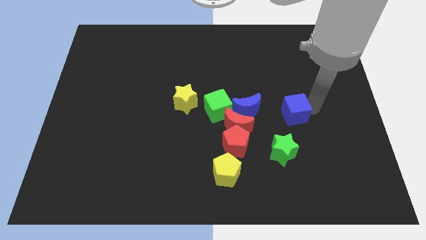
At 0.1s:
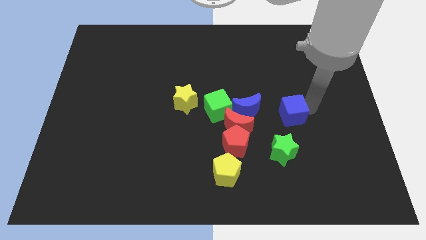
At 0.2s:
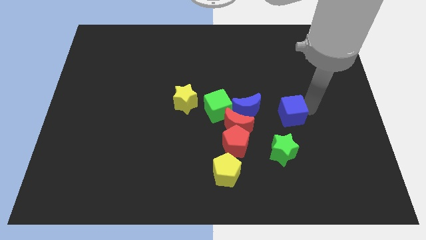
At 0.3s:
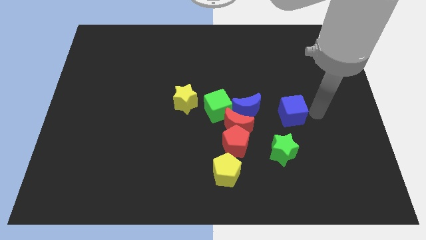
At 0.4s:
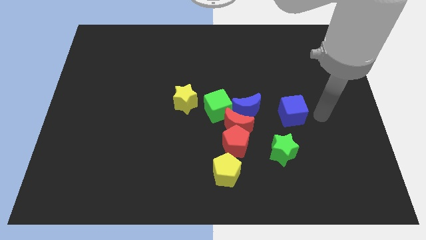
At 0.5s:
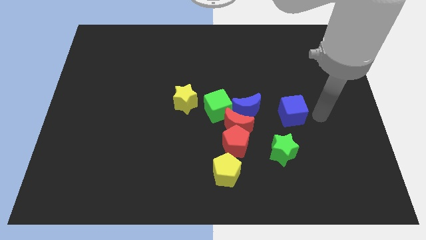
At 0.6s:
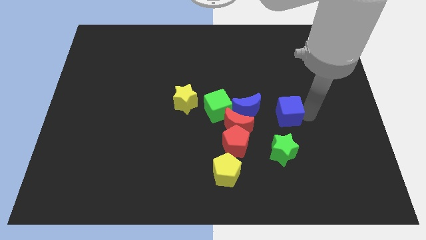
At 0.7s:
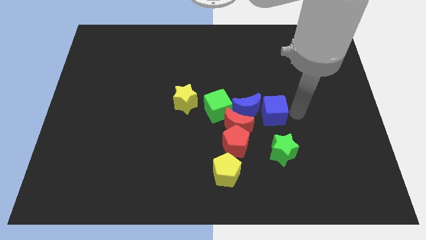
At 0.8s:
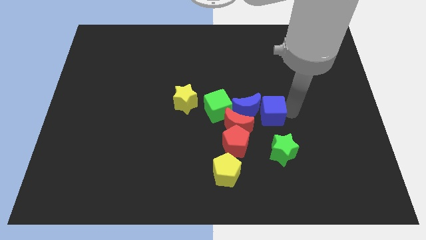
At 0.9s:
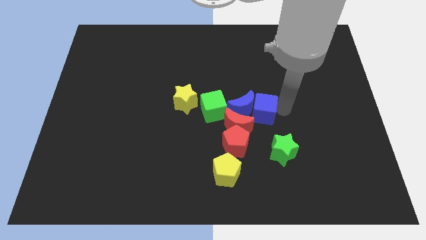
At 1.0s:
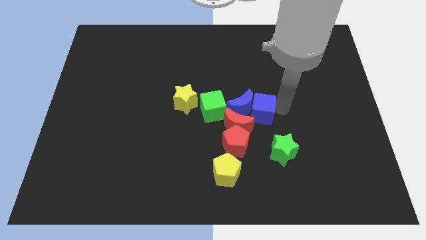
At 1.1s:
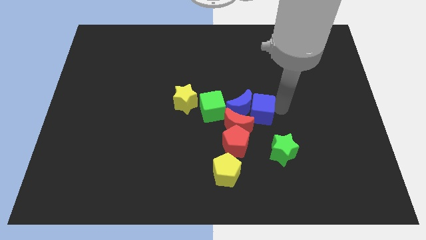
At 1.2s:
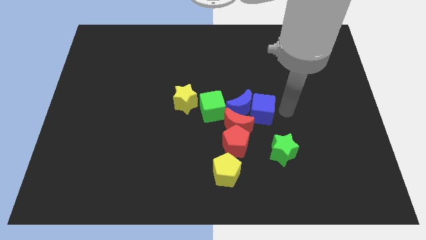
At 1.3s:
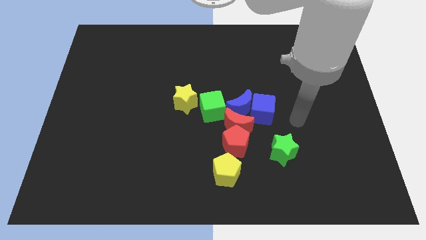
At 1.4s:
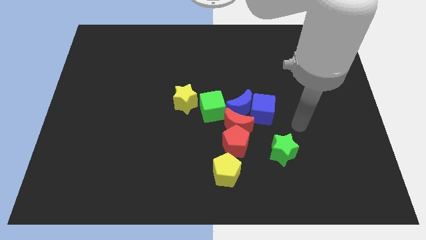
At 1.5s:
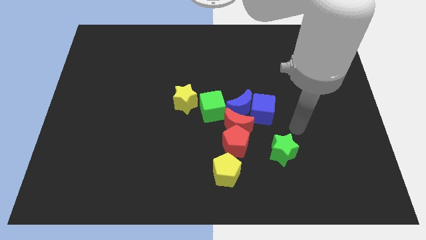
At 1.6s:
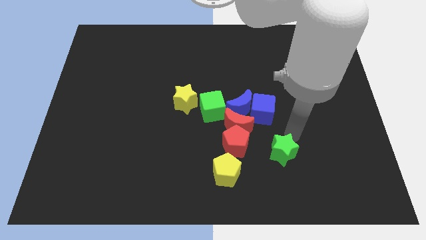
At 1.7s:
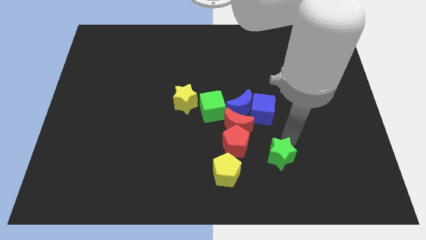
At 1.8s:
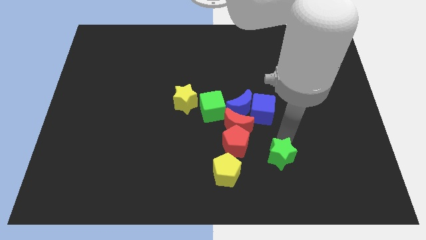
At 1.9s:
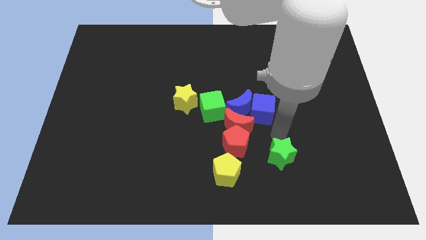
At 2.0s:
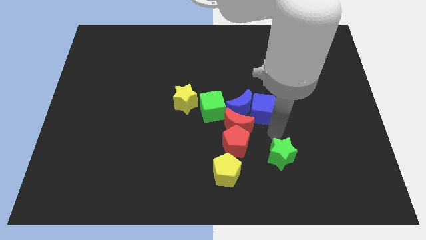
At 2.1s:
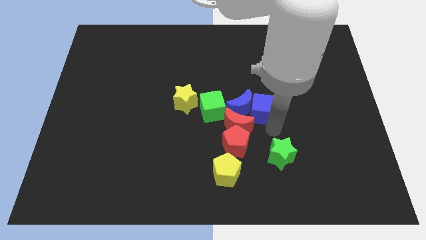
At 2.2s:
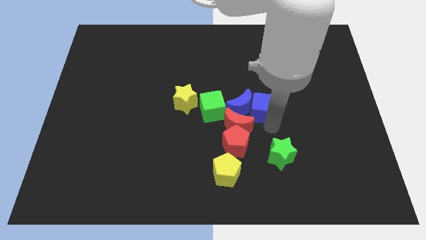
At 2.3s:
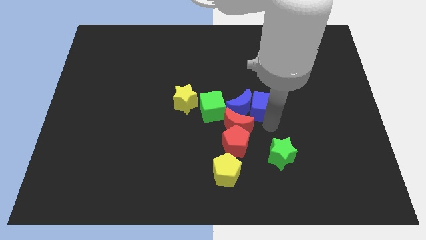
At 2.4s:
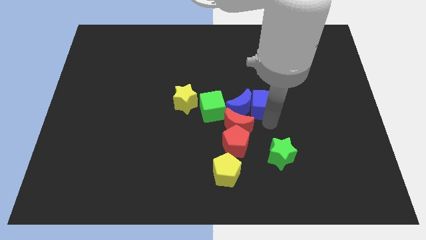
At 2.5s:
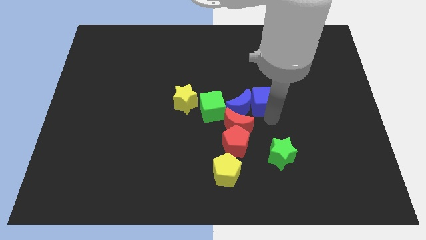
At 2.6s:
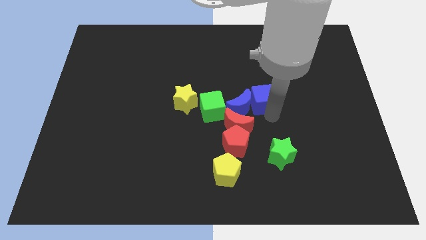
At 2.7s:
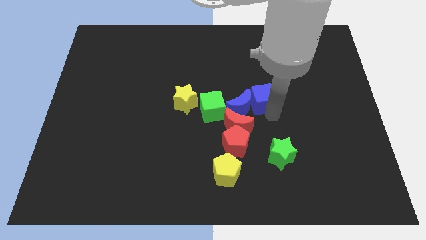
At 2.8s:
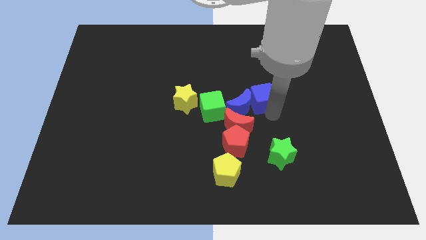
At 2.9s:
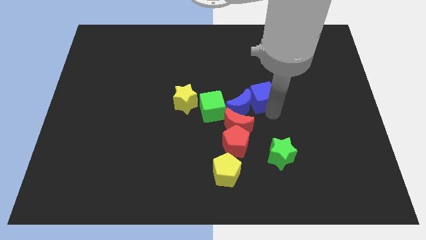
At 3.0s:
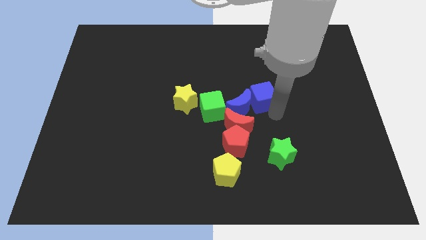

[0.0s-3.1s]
move blue cube towards blue moon

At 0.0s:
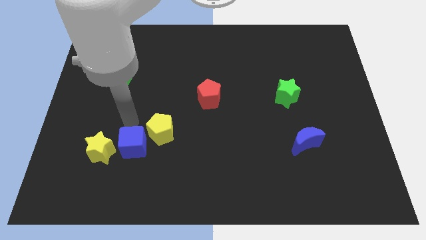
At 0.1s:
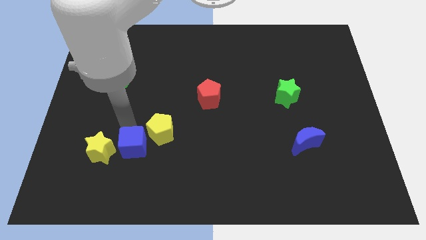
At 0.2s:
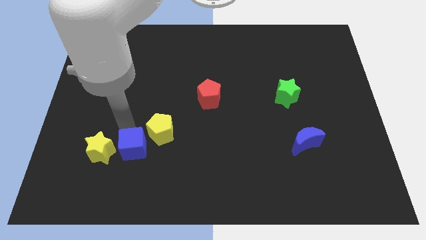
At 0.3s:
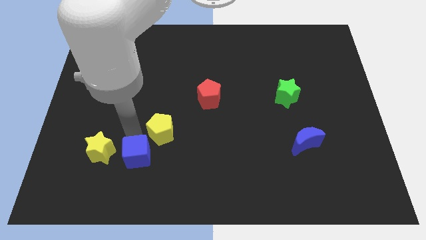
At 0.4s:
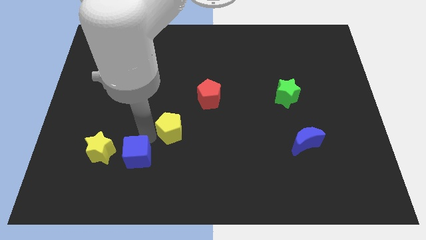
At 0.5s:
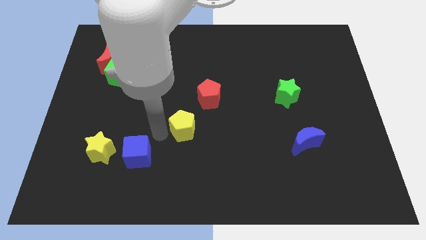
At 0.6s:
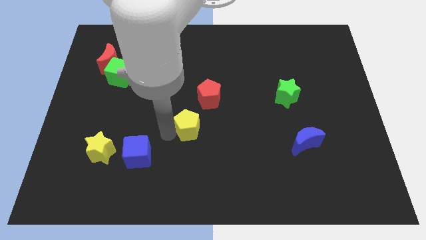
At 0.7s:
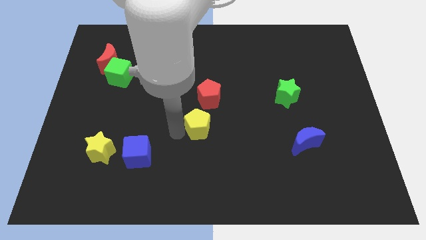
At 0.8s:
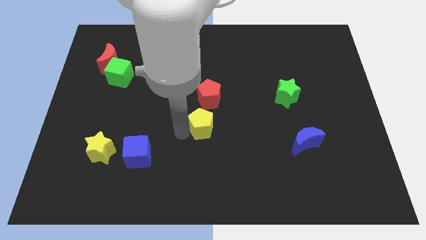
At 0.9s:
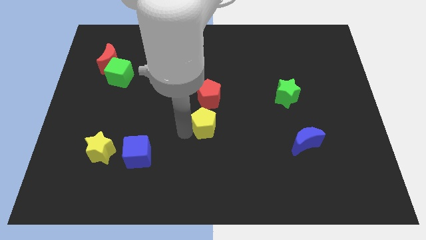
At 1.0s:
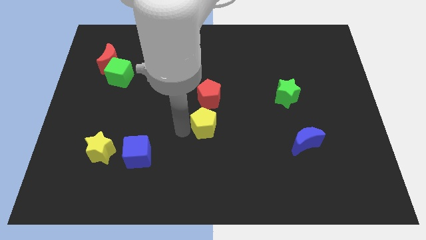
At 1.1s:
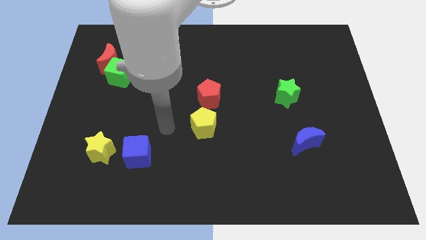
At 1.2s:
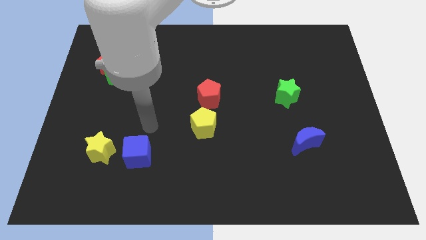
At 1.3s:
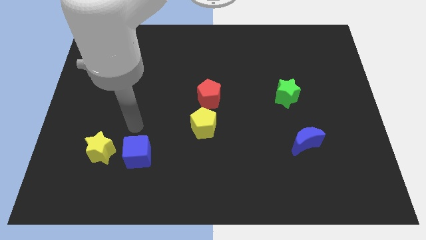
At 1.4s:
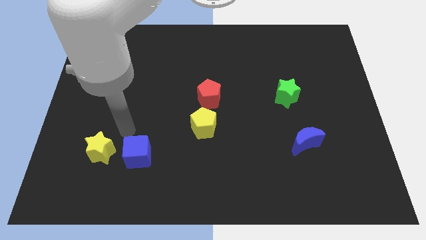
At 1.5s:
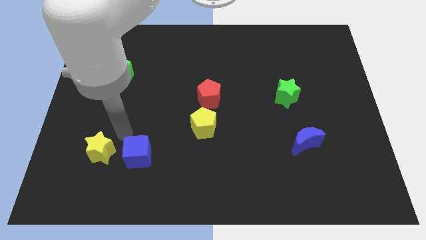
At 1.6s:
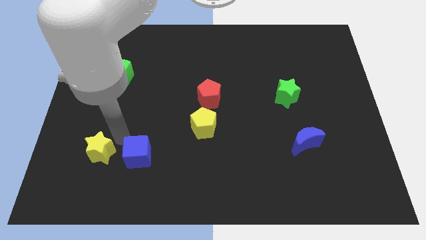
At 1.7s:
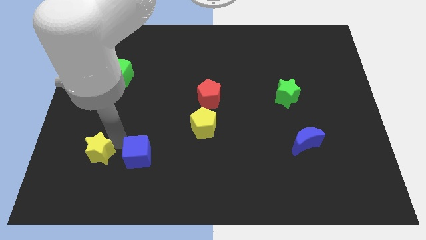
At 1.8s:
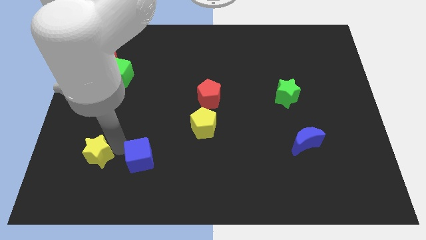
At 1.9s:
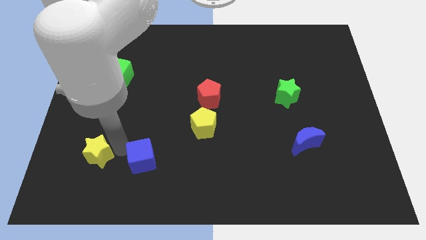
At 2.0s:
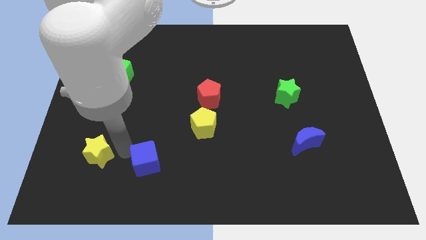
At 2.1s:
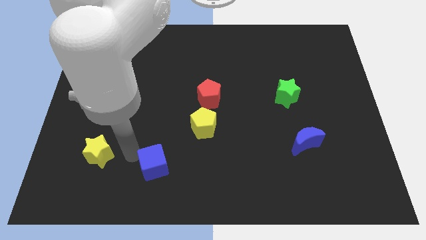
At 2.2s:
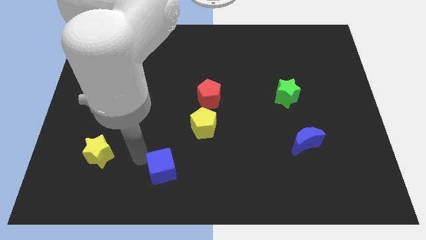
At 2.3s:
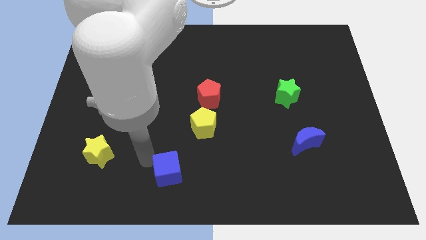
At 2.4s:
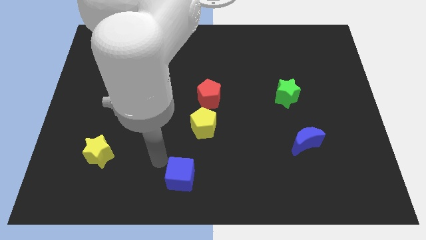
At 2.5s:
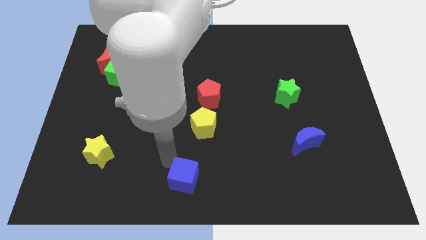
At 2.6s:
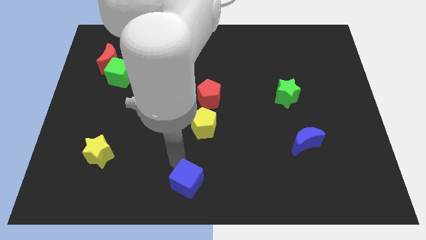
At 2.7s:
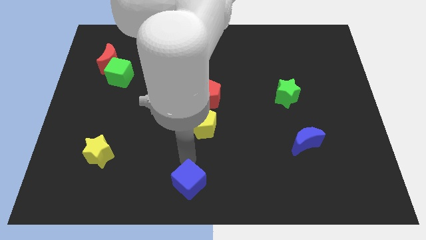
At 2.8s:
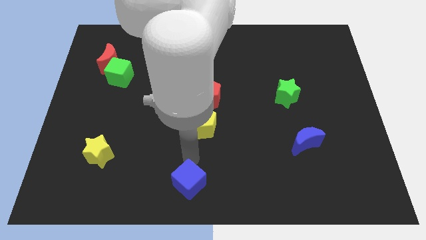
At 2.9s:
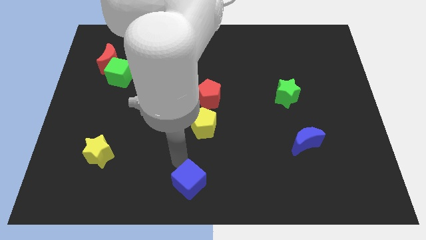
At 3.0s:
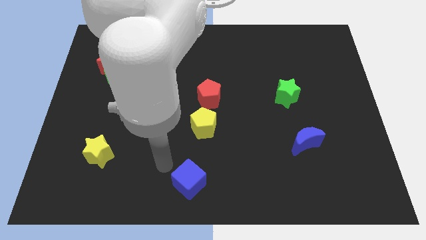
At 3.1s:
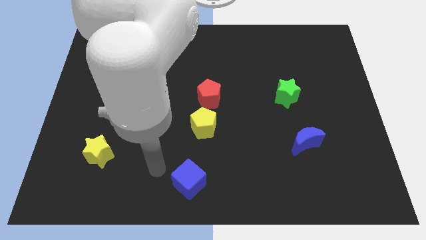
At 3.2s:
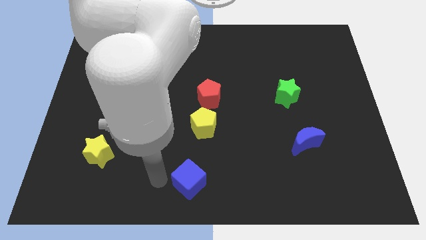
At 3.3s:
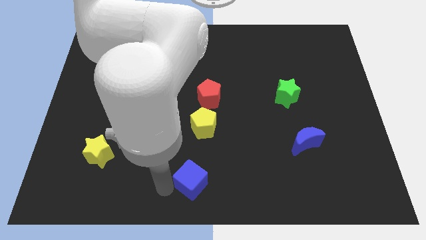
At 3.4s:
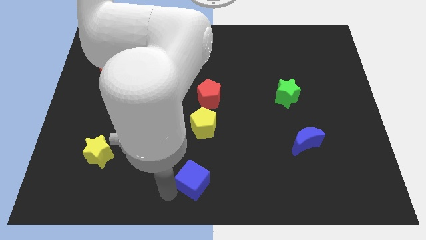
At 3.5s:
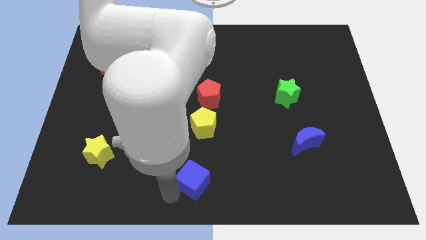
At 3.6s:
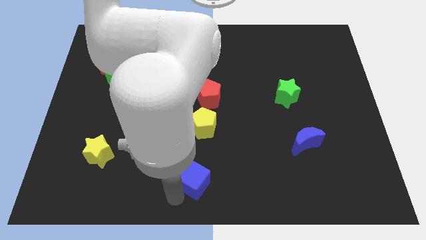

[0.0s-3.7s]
move the blue cube and the yellow pentagon vertical

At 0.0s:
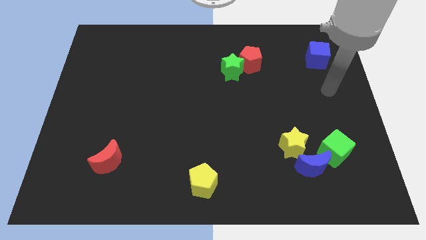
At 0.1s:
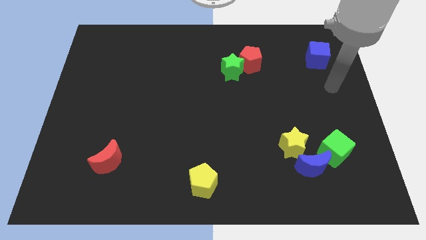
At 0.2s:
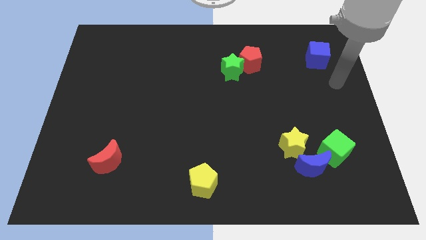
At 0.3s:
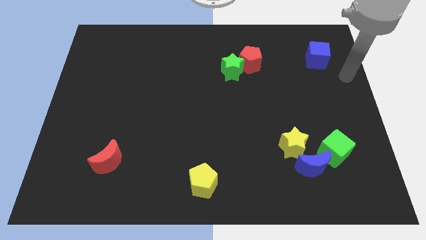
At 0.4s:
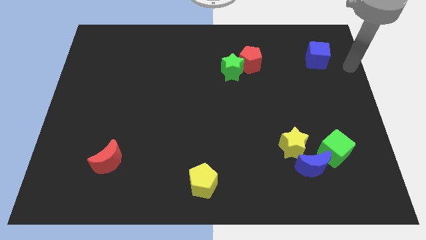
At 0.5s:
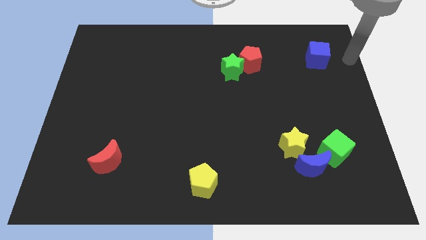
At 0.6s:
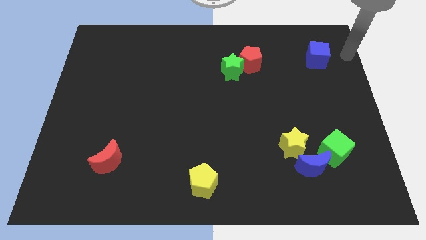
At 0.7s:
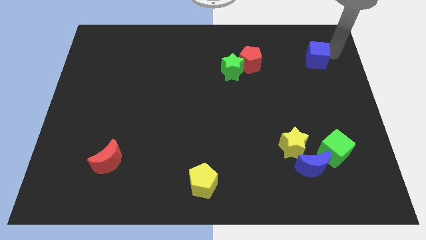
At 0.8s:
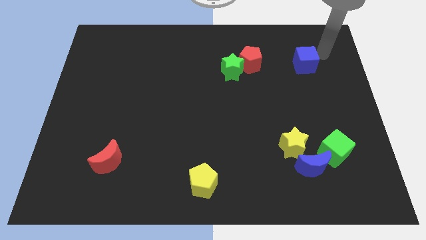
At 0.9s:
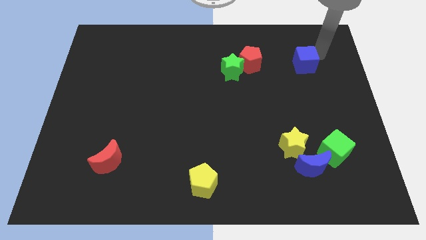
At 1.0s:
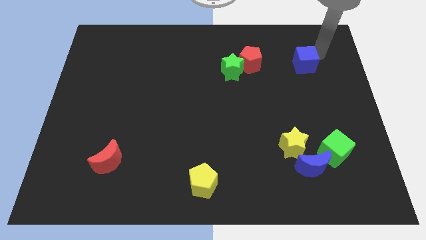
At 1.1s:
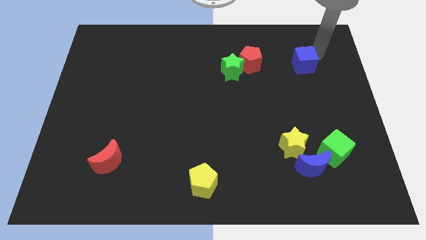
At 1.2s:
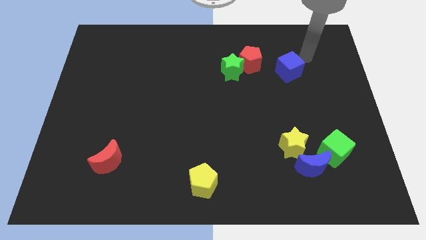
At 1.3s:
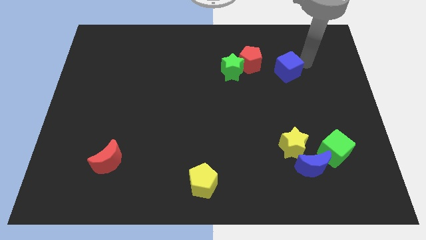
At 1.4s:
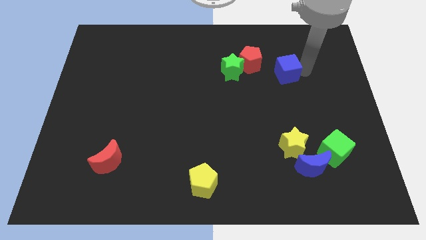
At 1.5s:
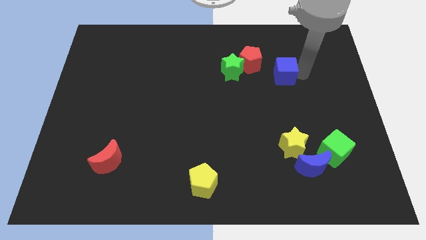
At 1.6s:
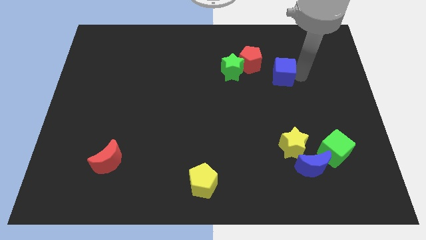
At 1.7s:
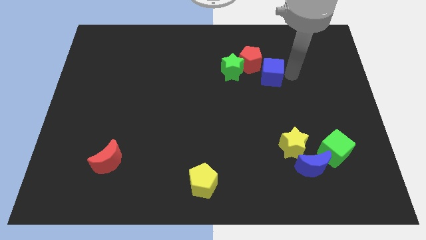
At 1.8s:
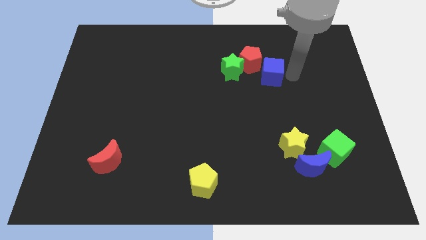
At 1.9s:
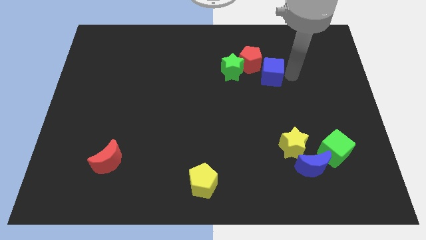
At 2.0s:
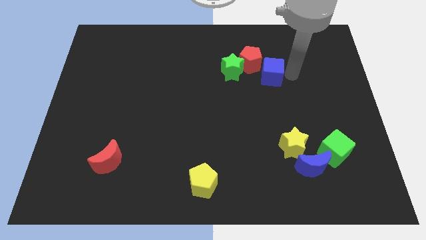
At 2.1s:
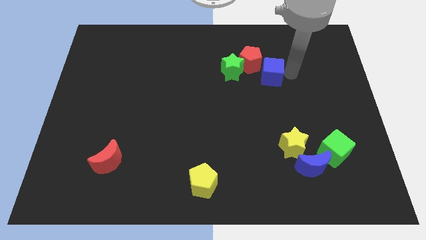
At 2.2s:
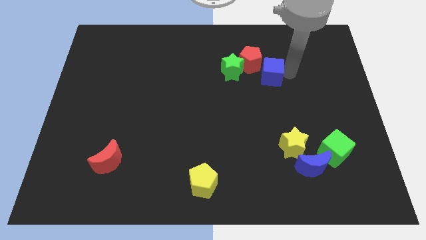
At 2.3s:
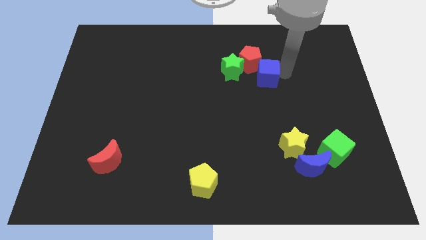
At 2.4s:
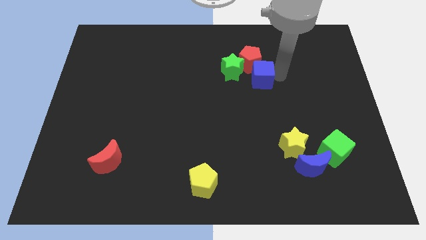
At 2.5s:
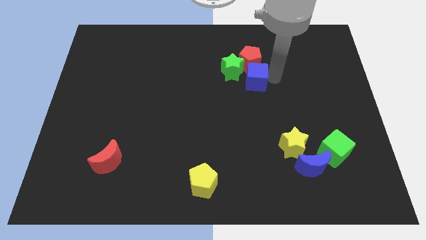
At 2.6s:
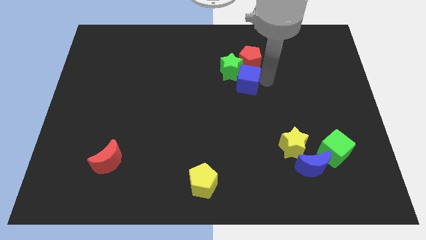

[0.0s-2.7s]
place the blue cube below the red pentagon
